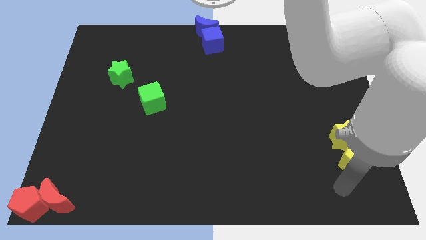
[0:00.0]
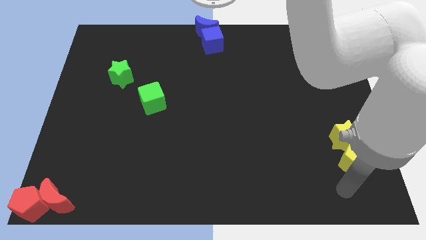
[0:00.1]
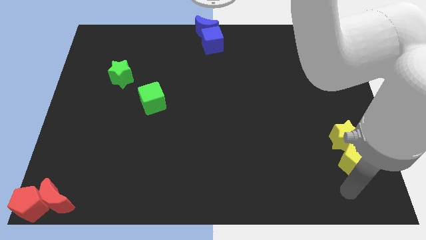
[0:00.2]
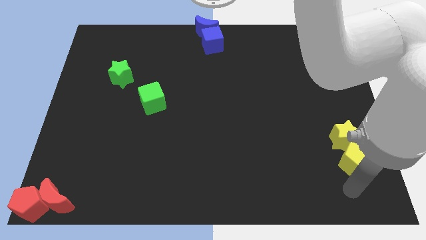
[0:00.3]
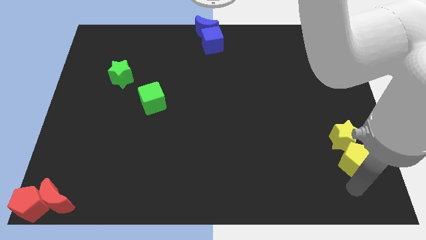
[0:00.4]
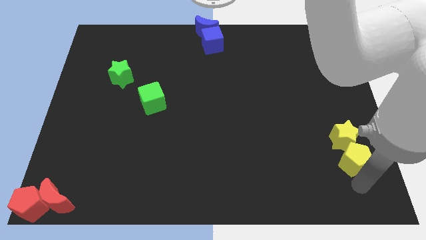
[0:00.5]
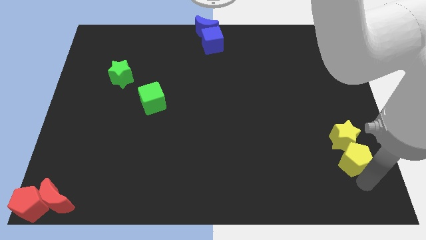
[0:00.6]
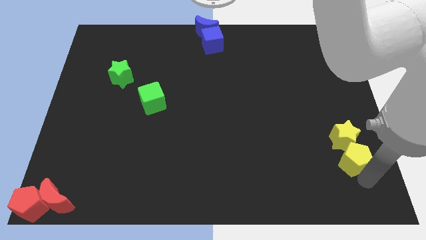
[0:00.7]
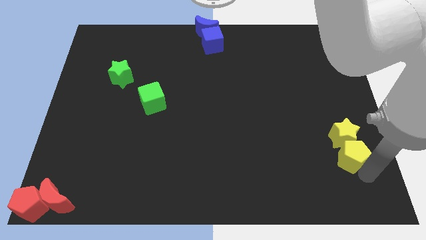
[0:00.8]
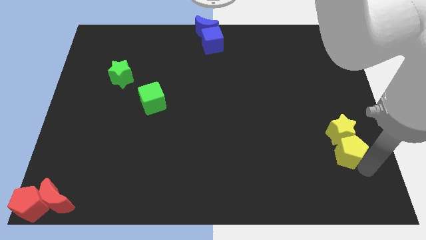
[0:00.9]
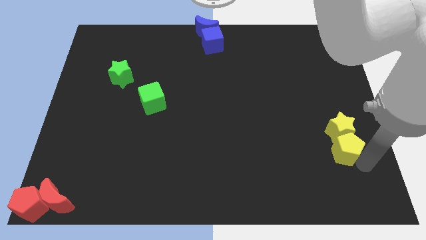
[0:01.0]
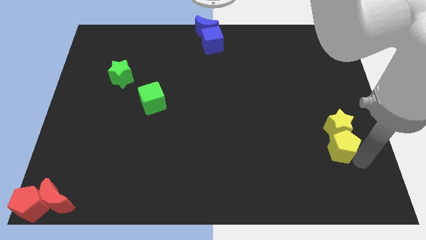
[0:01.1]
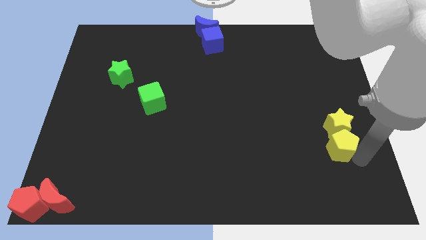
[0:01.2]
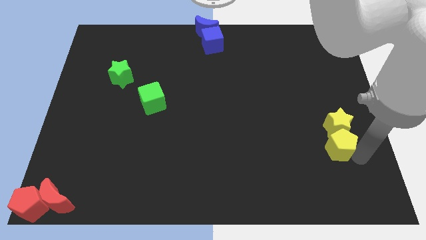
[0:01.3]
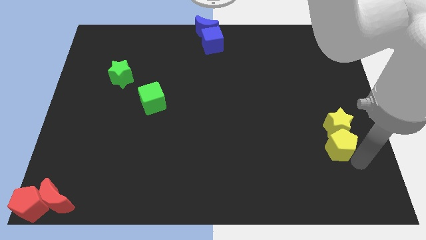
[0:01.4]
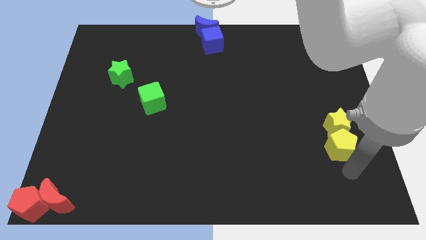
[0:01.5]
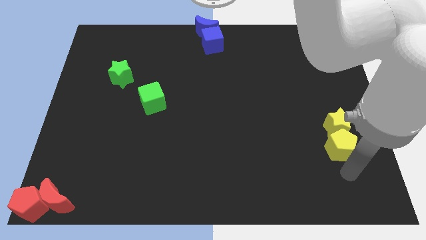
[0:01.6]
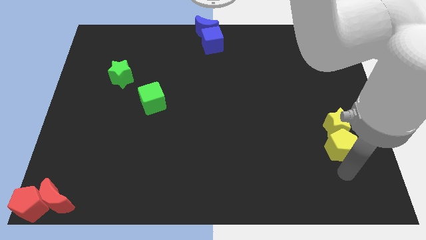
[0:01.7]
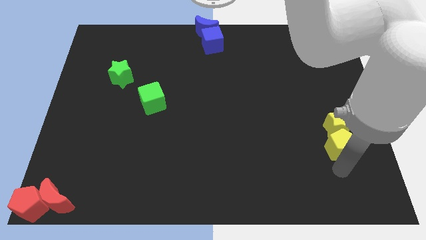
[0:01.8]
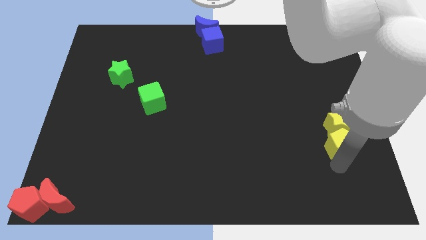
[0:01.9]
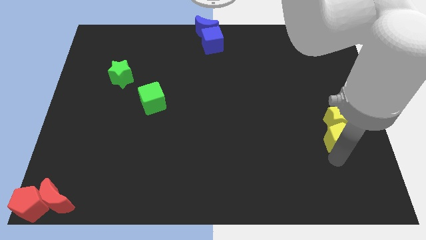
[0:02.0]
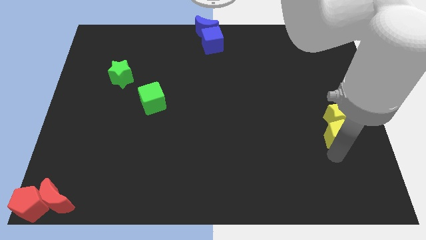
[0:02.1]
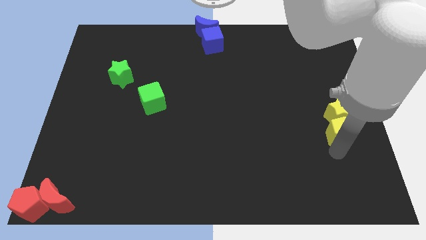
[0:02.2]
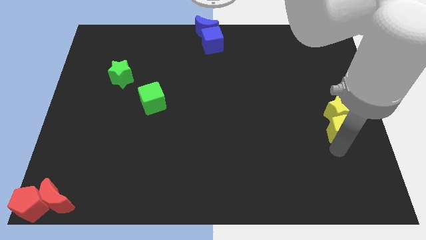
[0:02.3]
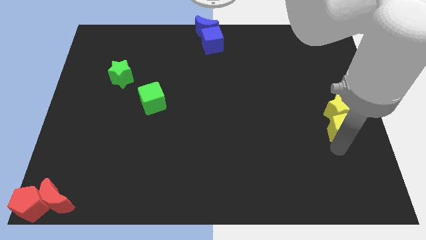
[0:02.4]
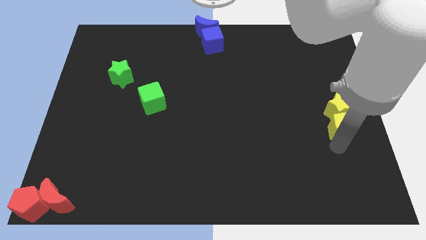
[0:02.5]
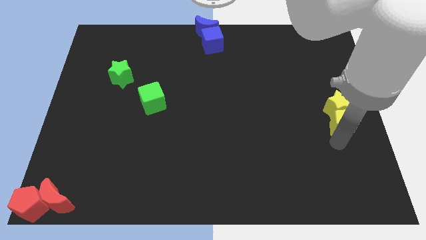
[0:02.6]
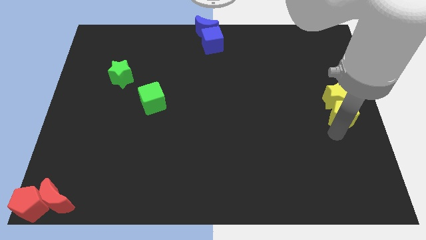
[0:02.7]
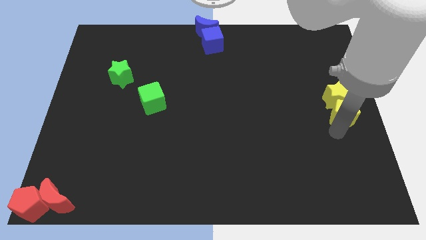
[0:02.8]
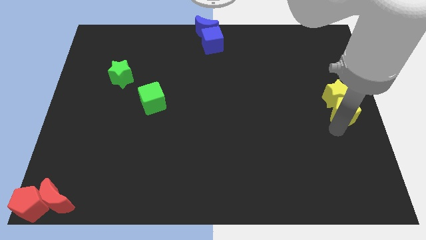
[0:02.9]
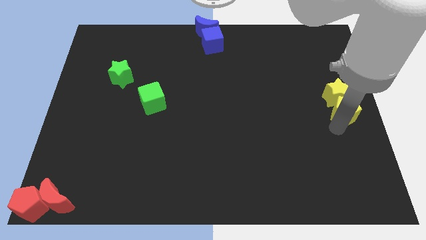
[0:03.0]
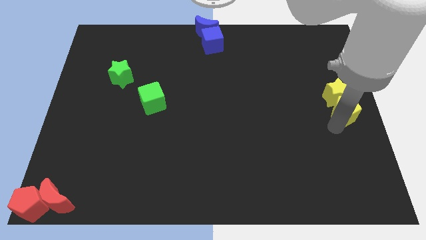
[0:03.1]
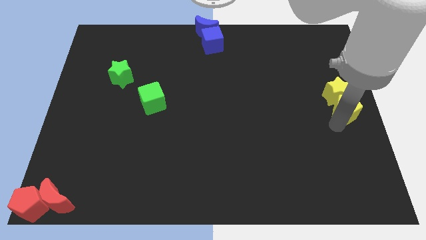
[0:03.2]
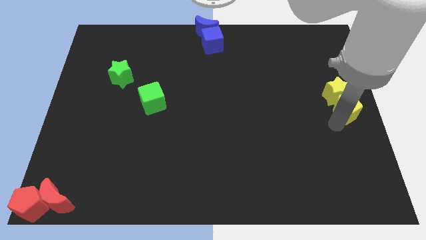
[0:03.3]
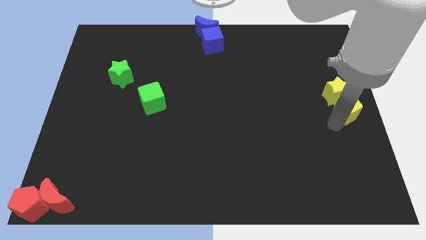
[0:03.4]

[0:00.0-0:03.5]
push the yellow pentagon and the yellow star to the right side center

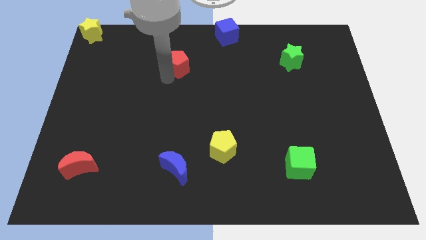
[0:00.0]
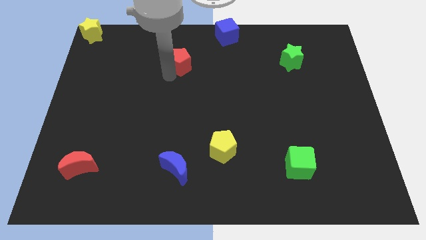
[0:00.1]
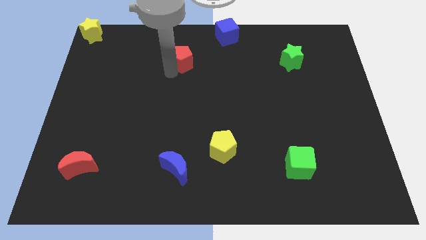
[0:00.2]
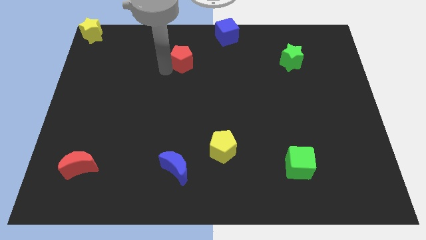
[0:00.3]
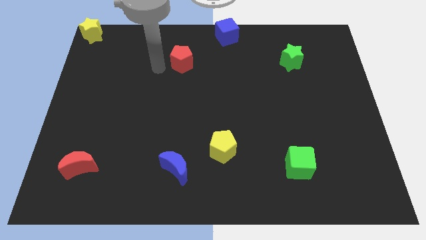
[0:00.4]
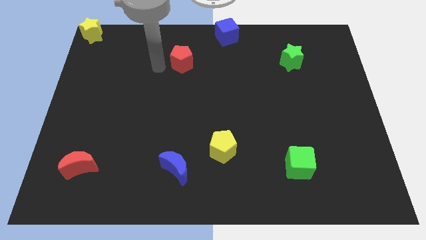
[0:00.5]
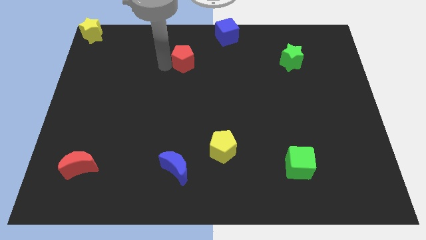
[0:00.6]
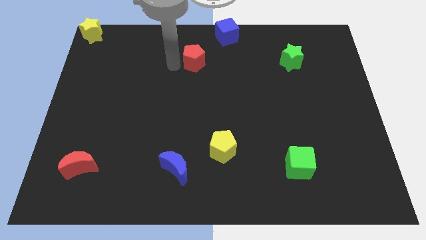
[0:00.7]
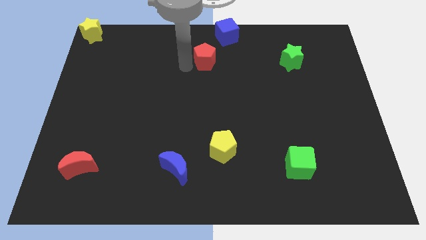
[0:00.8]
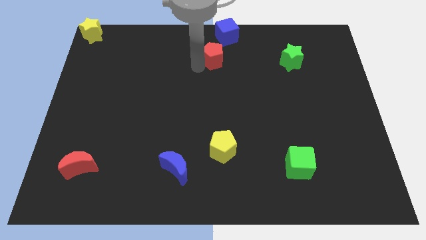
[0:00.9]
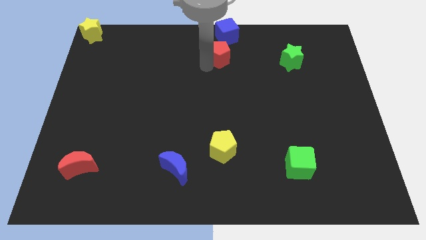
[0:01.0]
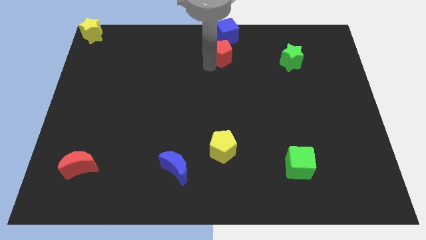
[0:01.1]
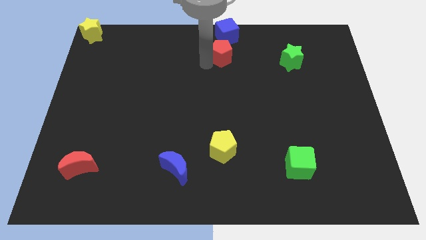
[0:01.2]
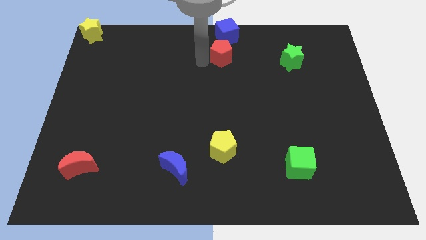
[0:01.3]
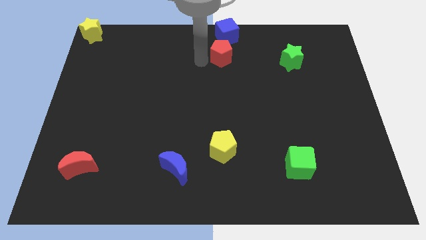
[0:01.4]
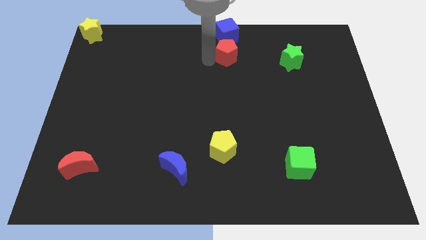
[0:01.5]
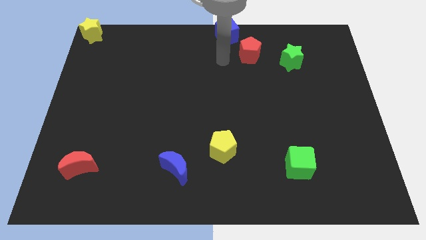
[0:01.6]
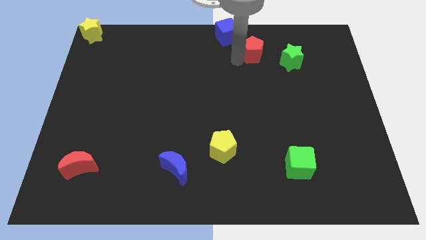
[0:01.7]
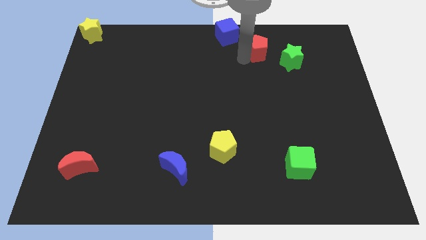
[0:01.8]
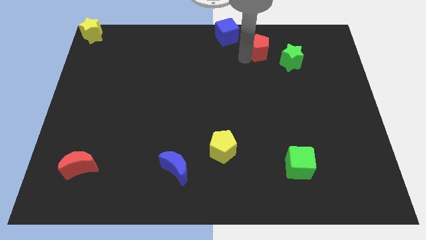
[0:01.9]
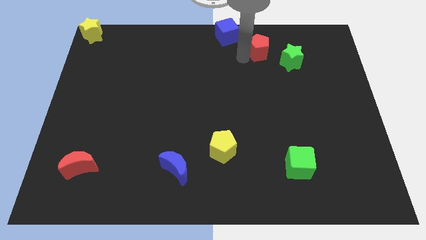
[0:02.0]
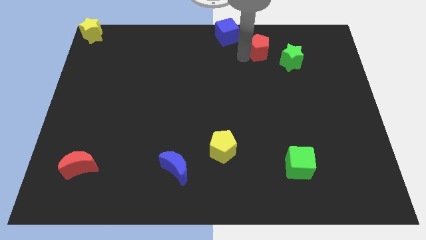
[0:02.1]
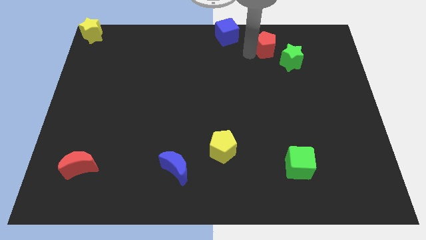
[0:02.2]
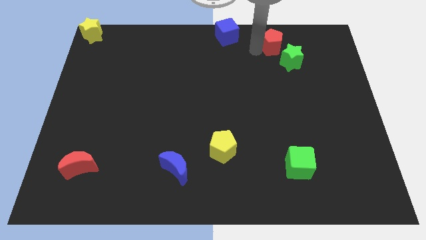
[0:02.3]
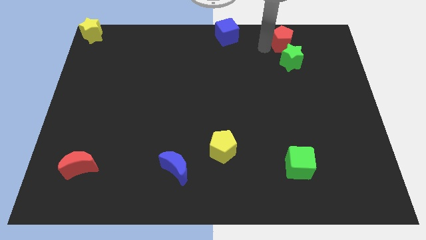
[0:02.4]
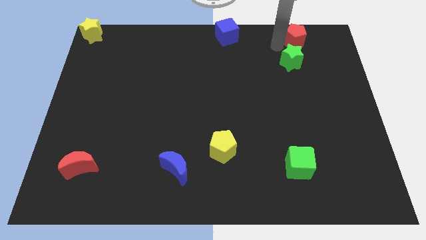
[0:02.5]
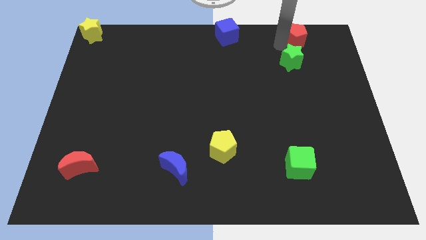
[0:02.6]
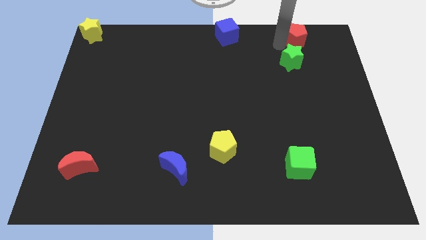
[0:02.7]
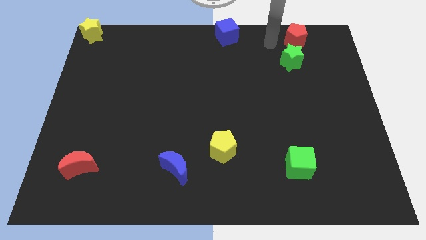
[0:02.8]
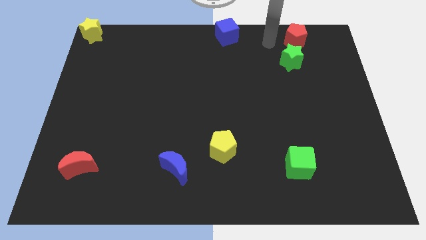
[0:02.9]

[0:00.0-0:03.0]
move the red pentagon above the green star

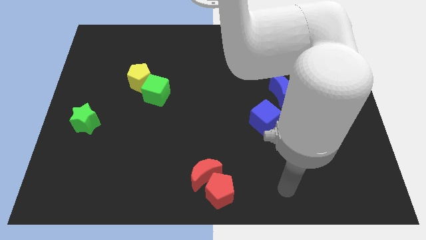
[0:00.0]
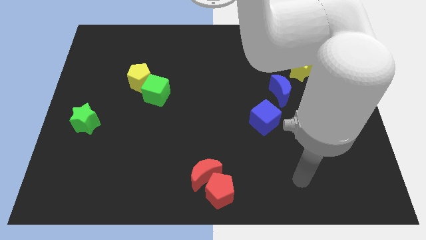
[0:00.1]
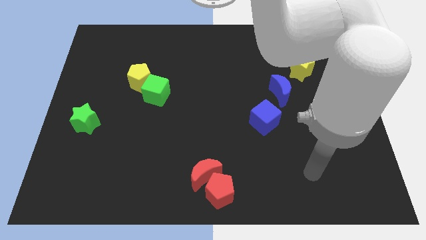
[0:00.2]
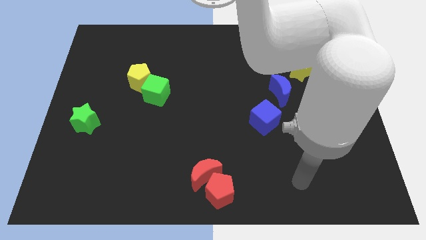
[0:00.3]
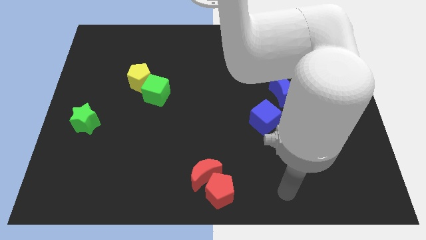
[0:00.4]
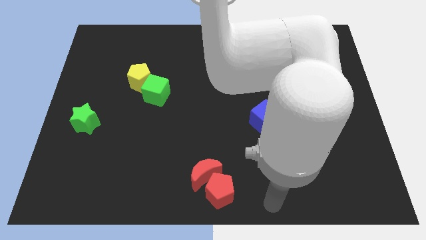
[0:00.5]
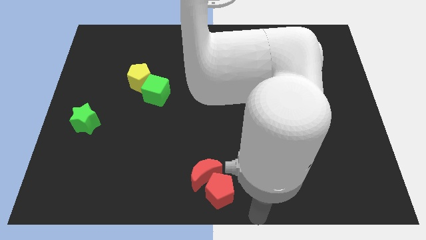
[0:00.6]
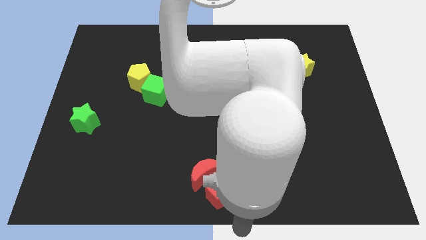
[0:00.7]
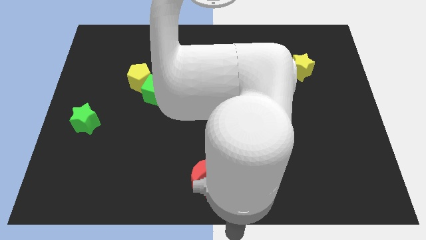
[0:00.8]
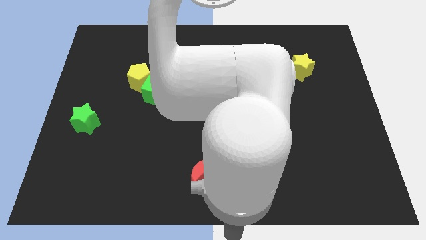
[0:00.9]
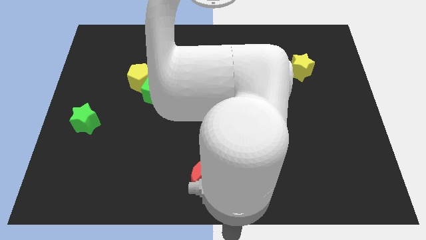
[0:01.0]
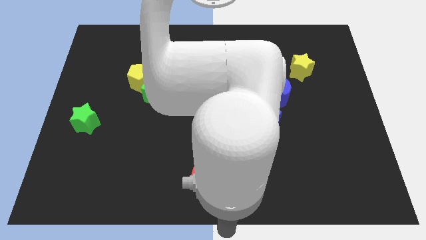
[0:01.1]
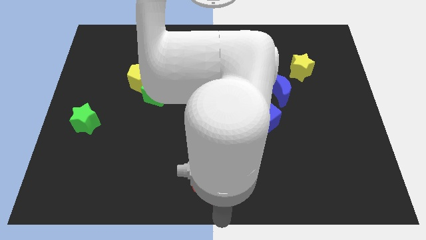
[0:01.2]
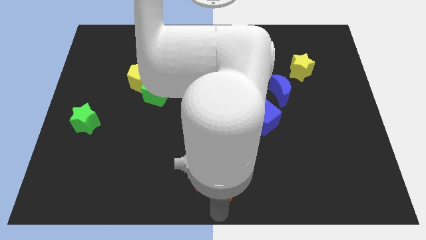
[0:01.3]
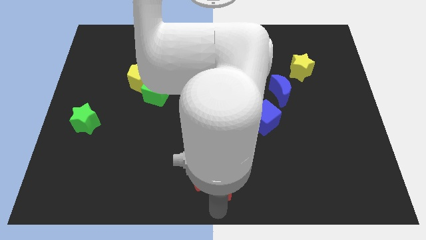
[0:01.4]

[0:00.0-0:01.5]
place your arm to the bottom of red pentagon

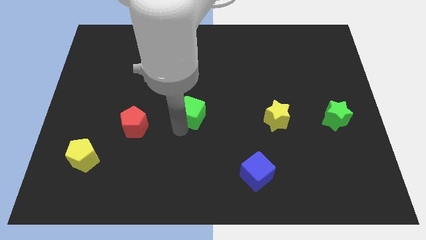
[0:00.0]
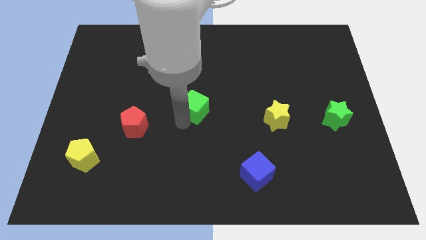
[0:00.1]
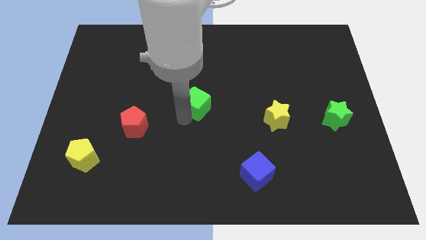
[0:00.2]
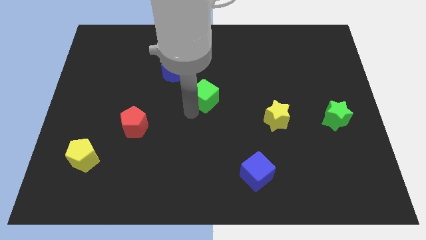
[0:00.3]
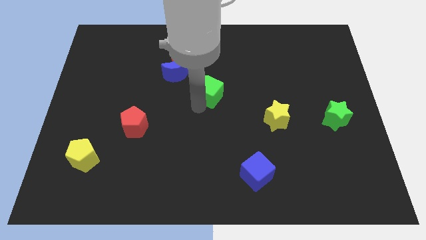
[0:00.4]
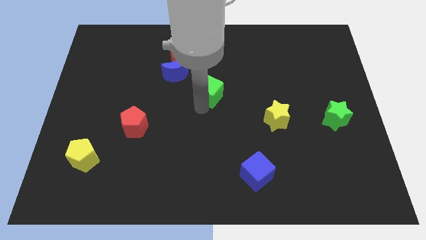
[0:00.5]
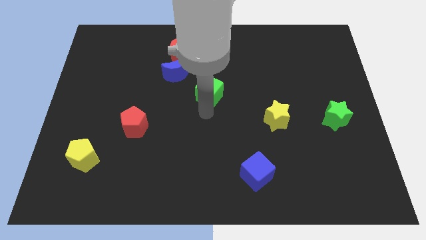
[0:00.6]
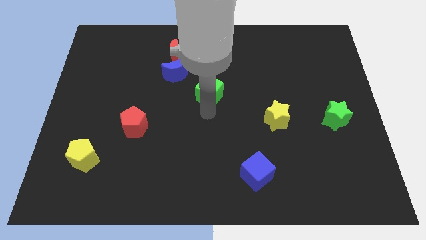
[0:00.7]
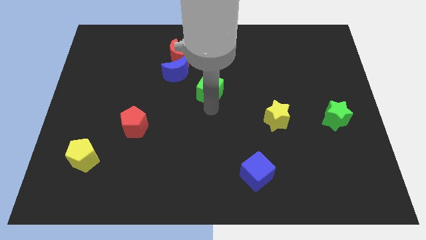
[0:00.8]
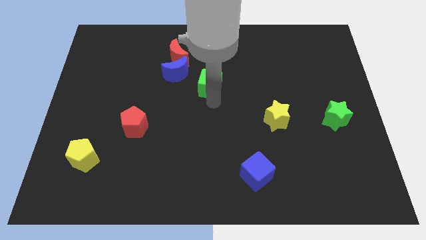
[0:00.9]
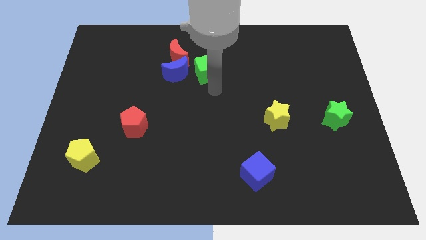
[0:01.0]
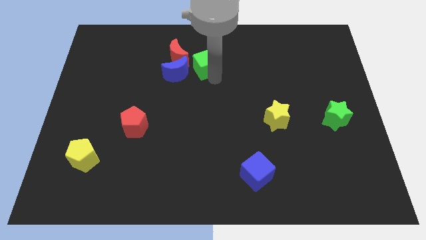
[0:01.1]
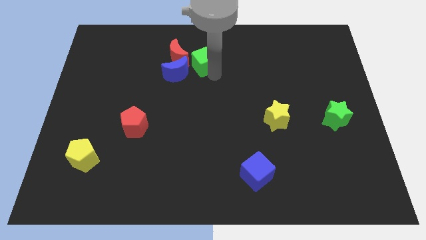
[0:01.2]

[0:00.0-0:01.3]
push the green cube to the right side of the group of crescents
